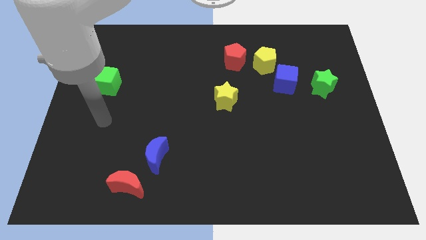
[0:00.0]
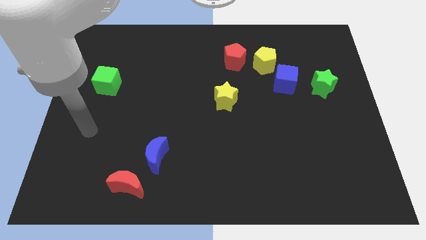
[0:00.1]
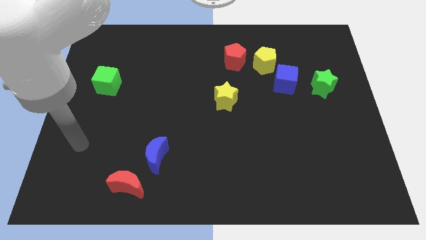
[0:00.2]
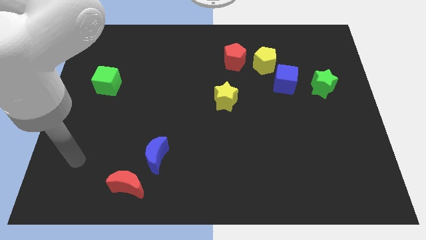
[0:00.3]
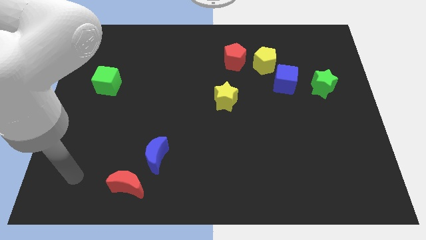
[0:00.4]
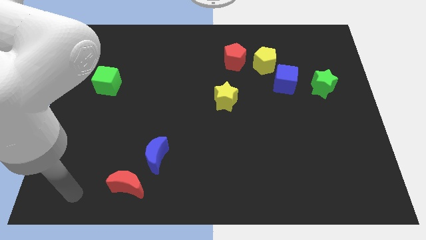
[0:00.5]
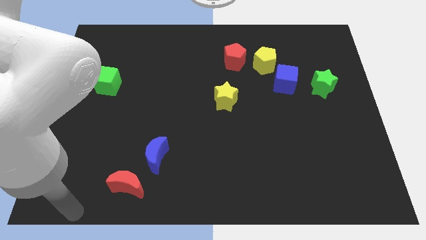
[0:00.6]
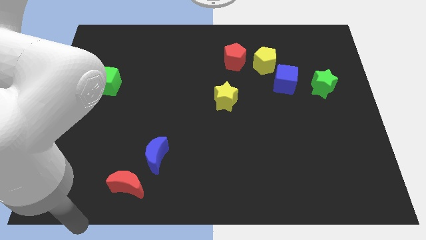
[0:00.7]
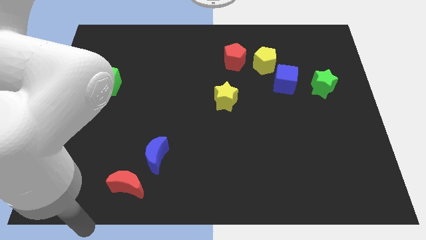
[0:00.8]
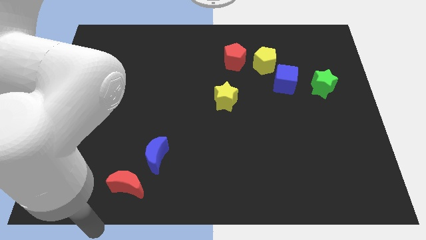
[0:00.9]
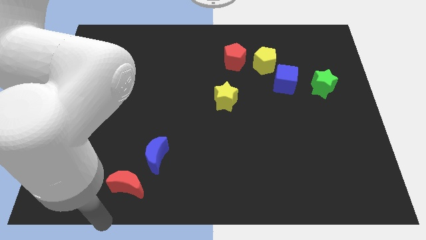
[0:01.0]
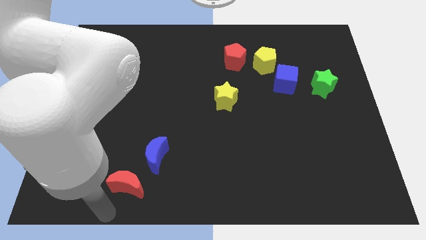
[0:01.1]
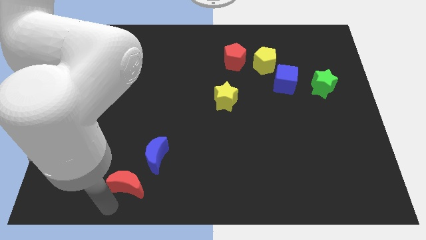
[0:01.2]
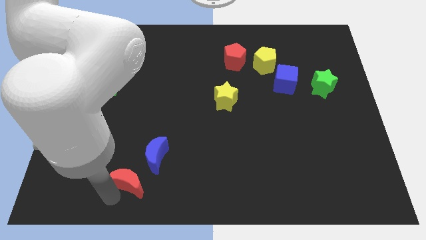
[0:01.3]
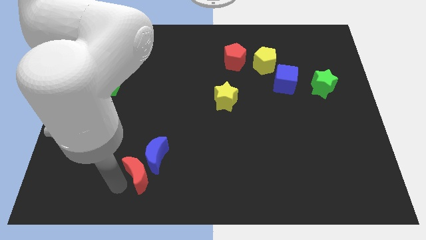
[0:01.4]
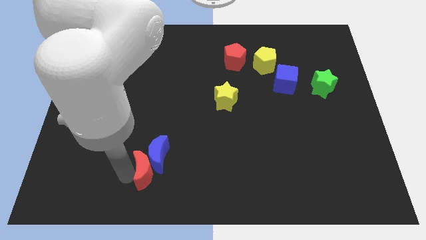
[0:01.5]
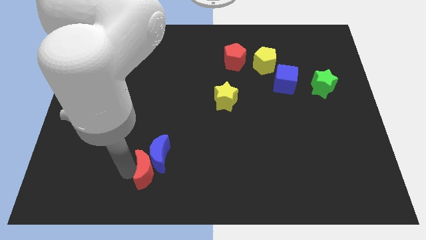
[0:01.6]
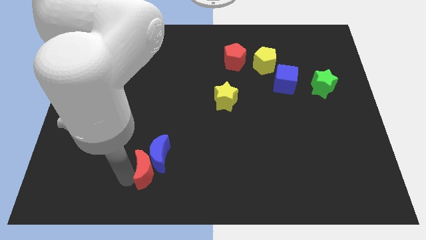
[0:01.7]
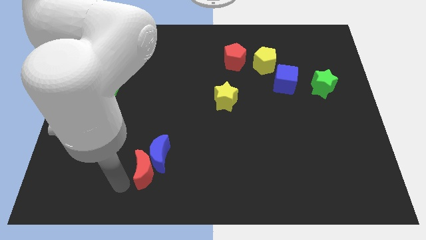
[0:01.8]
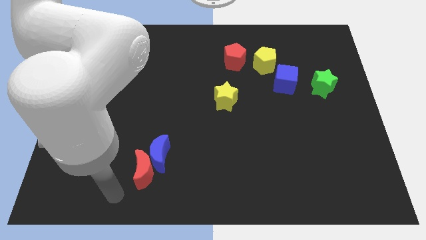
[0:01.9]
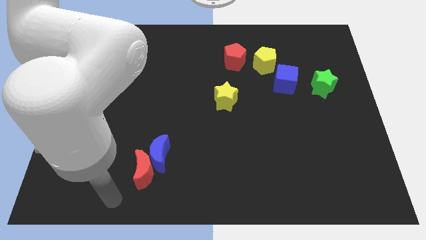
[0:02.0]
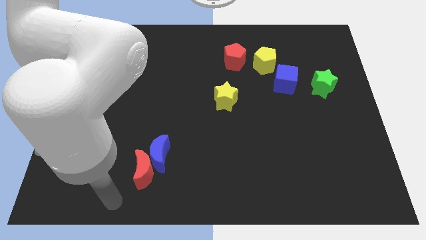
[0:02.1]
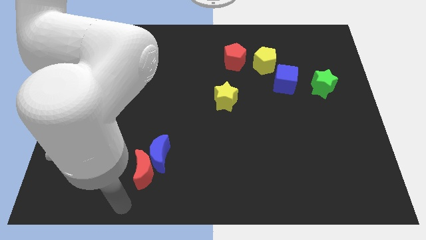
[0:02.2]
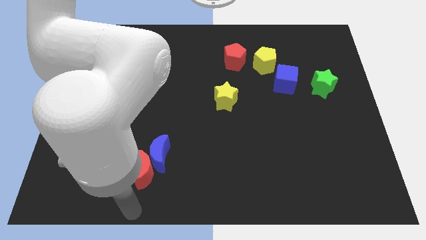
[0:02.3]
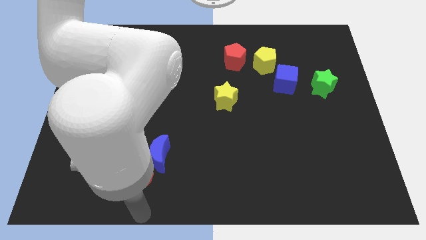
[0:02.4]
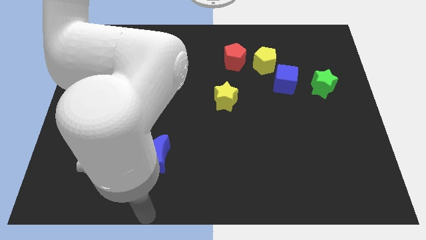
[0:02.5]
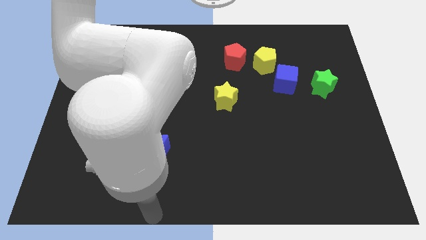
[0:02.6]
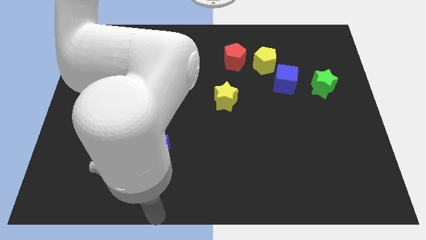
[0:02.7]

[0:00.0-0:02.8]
push the red moon into the blue moon

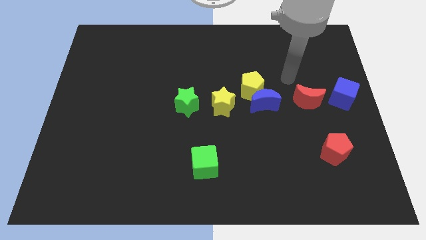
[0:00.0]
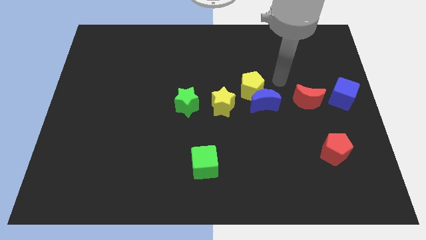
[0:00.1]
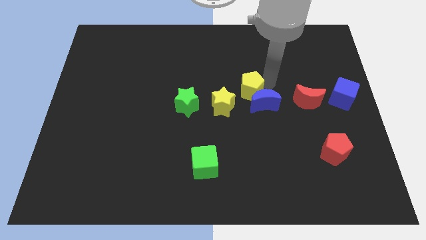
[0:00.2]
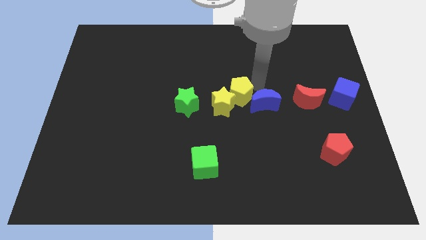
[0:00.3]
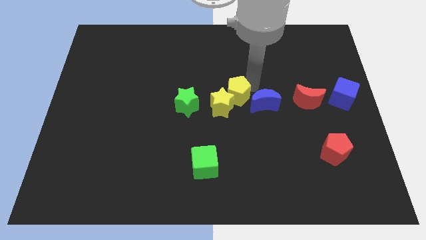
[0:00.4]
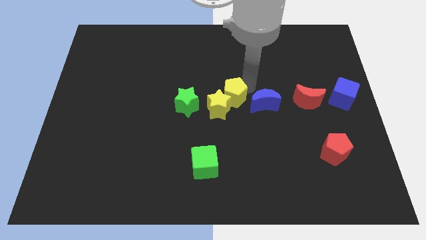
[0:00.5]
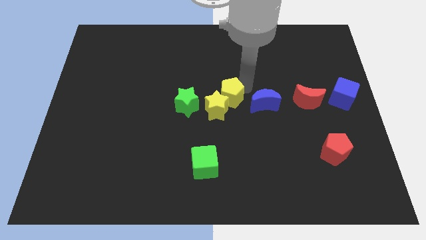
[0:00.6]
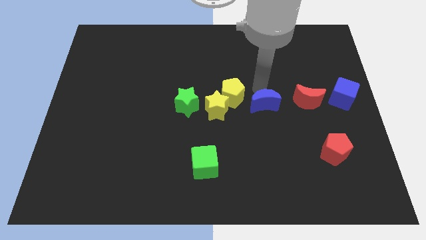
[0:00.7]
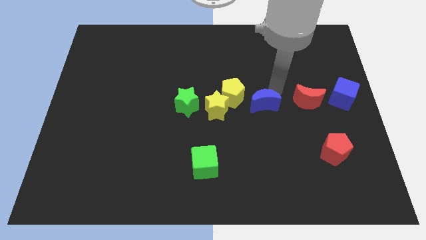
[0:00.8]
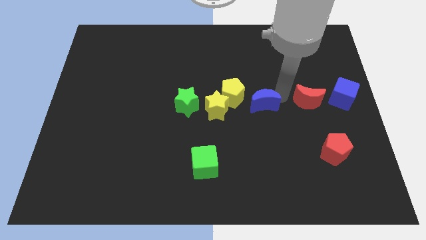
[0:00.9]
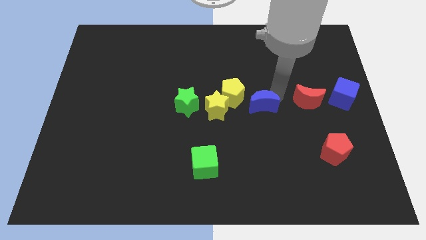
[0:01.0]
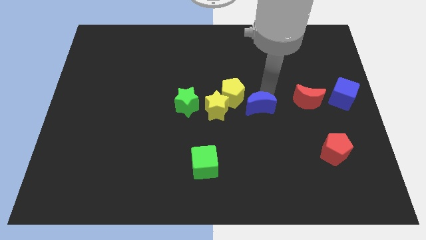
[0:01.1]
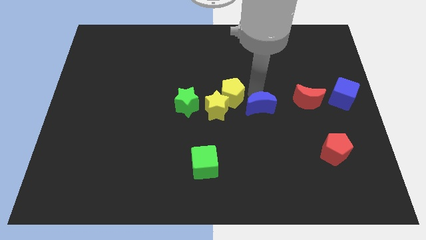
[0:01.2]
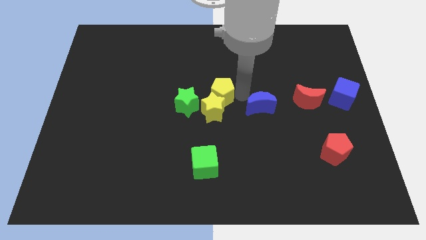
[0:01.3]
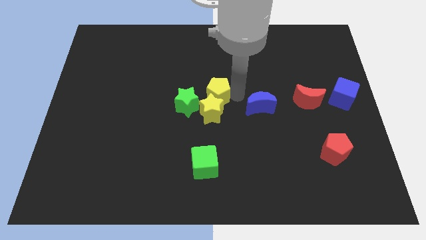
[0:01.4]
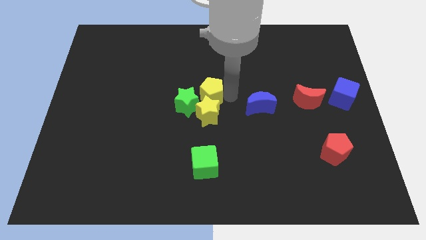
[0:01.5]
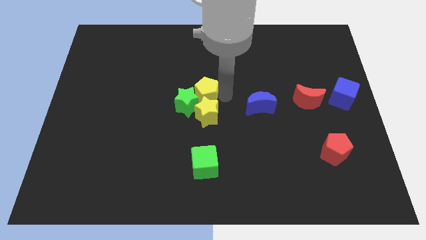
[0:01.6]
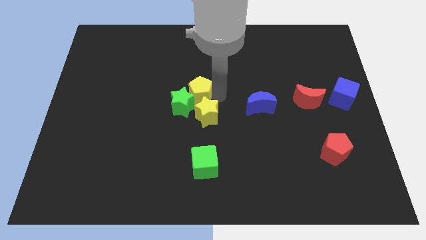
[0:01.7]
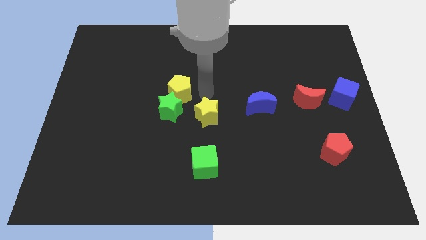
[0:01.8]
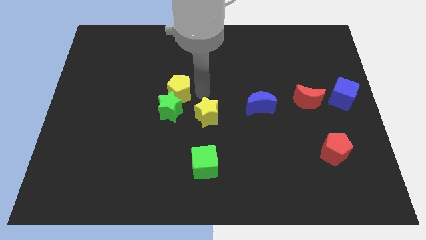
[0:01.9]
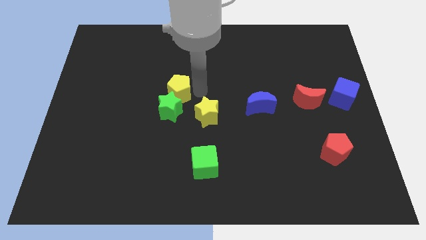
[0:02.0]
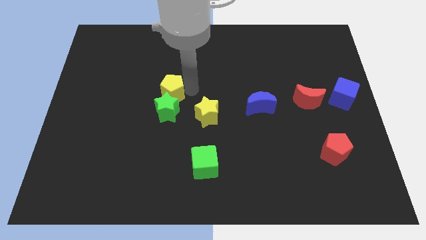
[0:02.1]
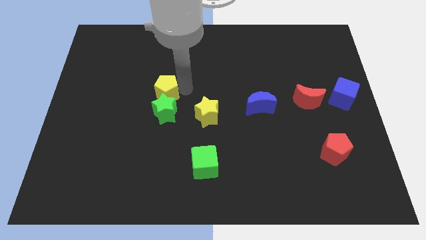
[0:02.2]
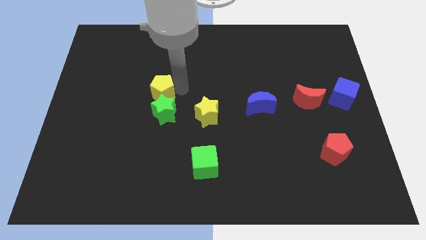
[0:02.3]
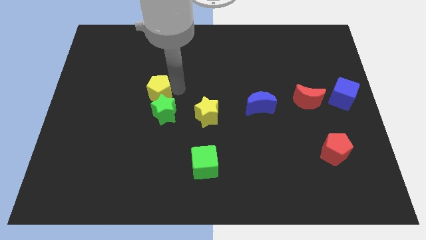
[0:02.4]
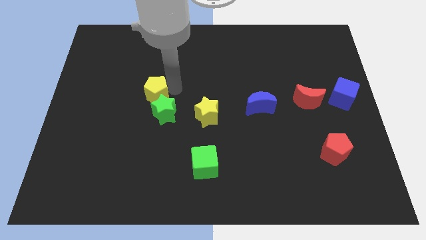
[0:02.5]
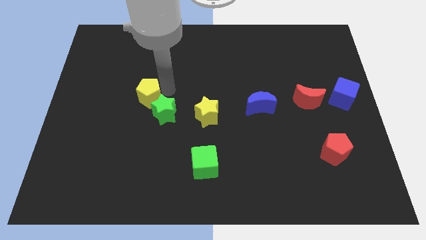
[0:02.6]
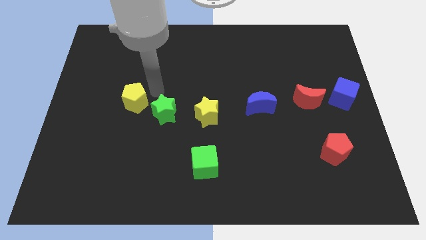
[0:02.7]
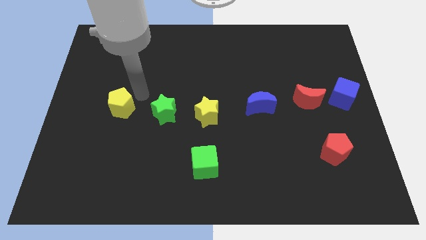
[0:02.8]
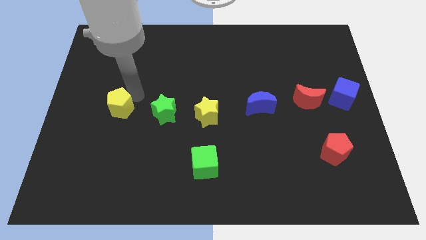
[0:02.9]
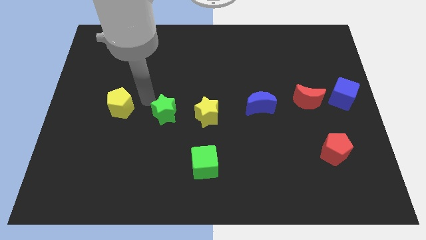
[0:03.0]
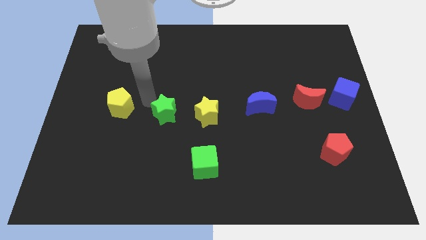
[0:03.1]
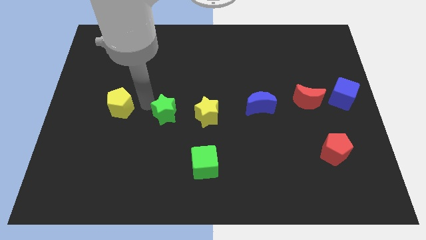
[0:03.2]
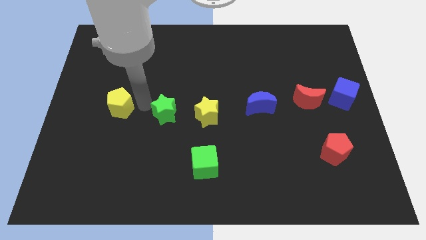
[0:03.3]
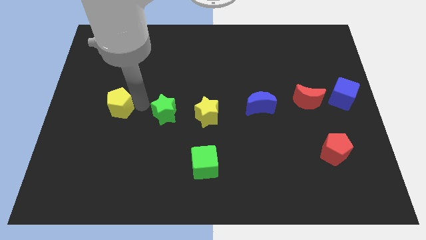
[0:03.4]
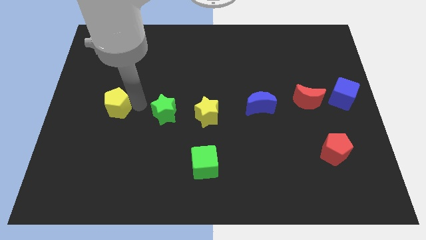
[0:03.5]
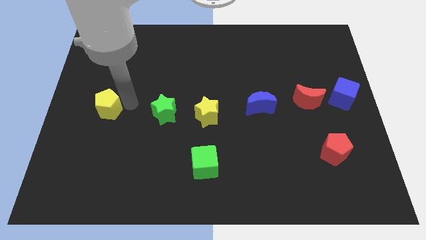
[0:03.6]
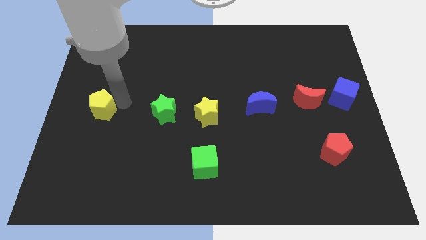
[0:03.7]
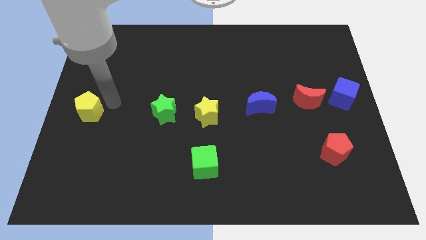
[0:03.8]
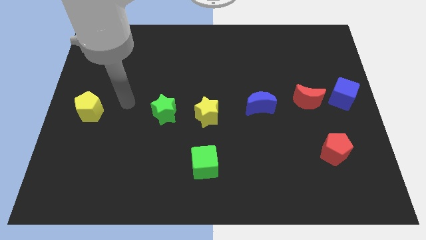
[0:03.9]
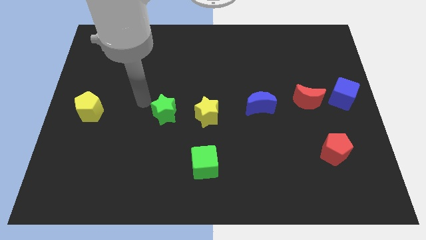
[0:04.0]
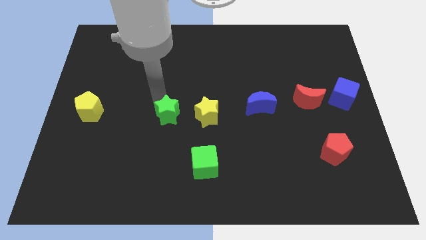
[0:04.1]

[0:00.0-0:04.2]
place the yellow pentagon to the middle left of the board

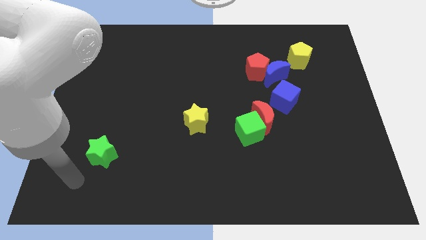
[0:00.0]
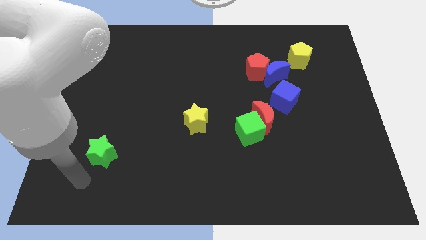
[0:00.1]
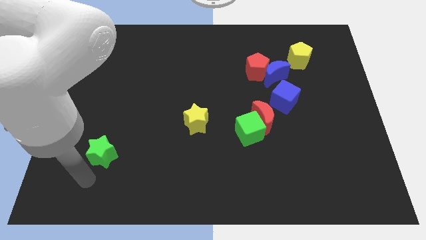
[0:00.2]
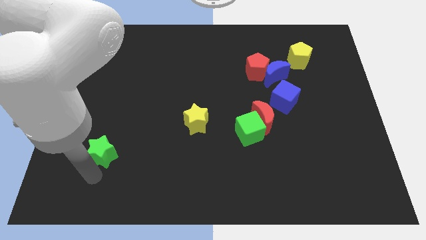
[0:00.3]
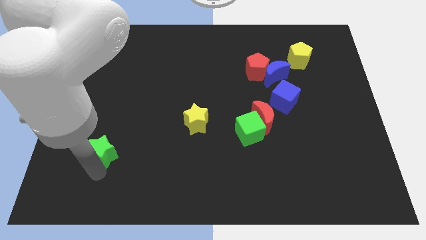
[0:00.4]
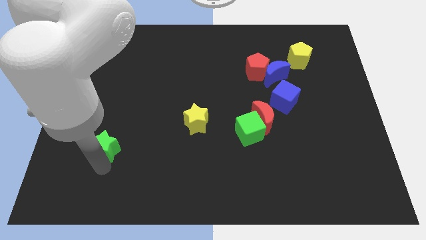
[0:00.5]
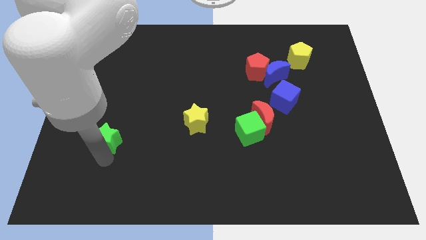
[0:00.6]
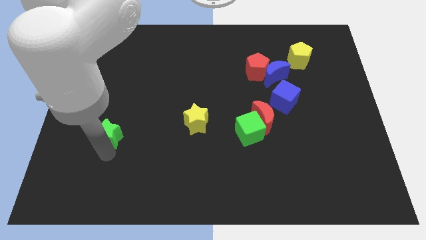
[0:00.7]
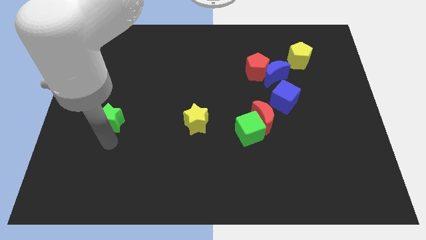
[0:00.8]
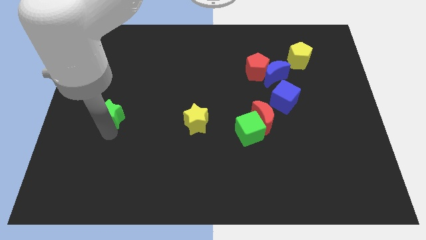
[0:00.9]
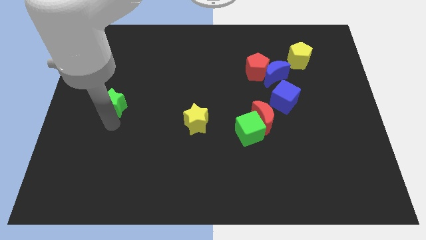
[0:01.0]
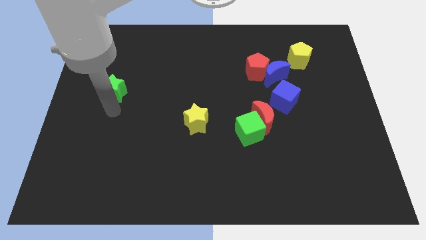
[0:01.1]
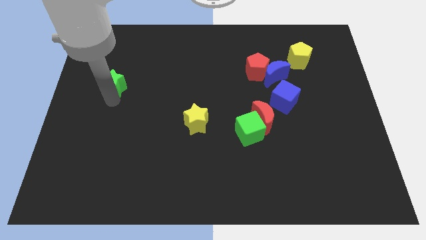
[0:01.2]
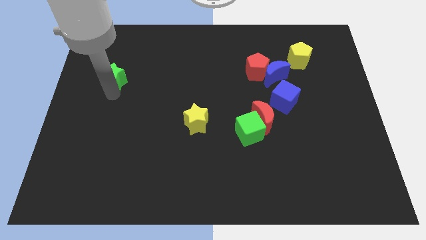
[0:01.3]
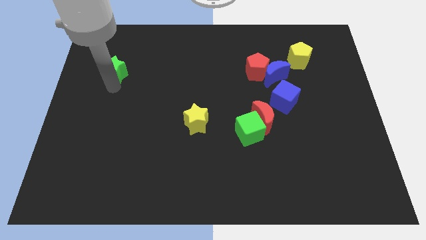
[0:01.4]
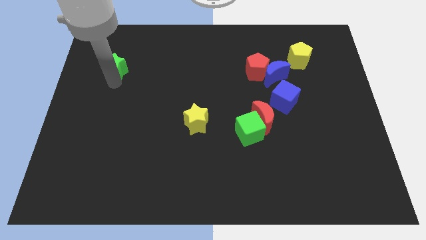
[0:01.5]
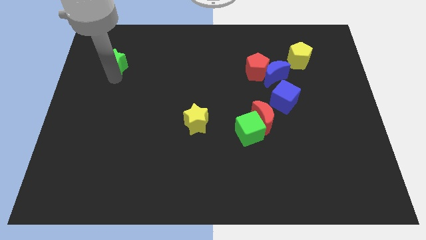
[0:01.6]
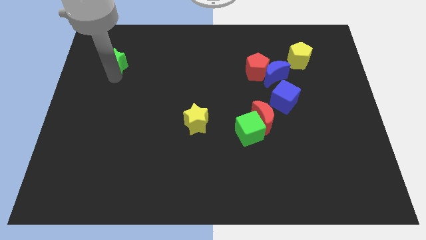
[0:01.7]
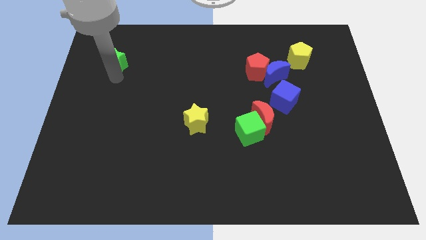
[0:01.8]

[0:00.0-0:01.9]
push the green star towards the top side of the board
